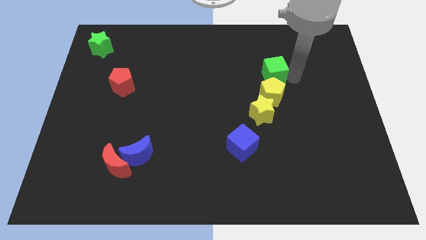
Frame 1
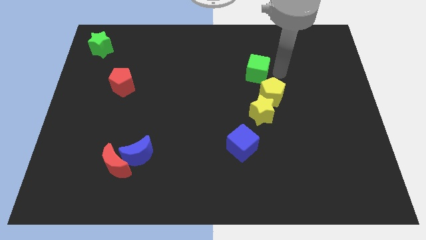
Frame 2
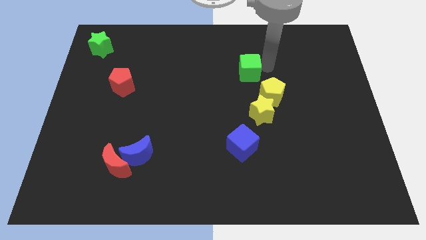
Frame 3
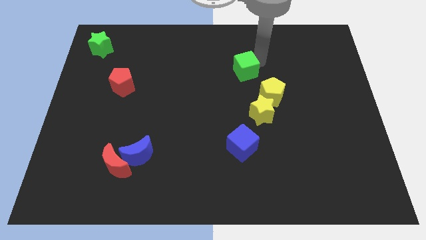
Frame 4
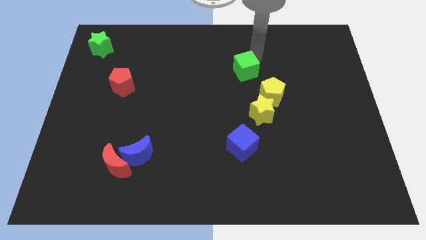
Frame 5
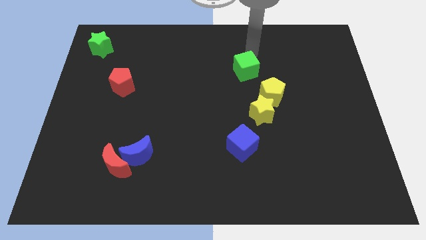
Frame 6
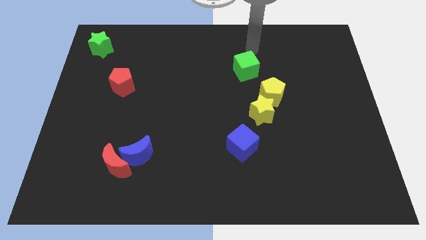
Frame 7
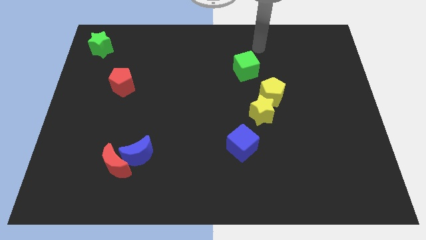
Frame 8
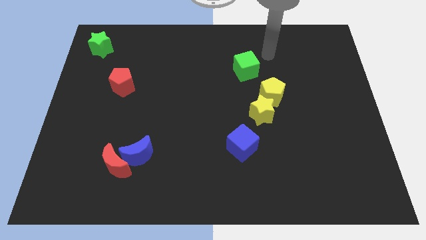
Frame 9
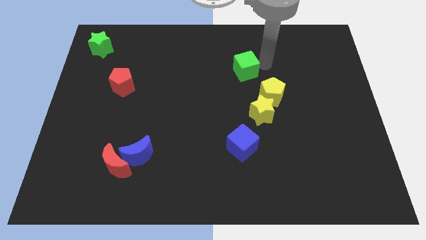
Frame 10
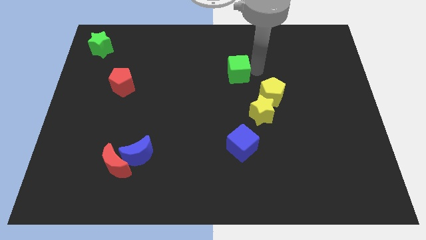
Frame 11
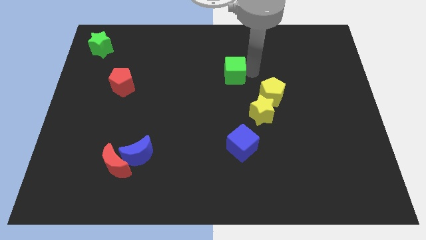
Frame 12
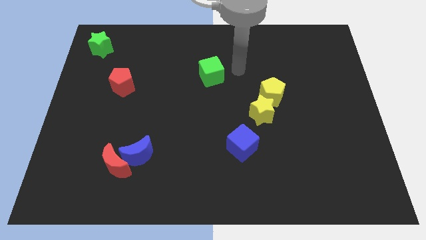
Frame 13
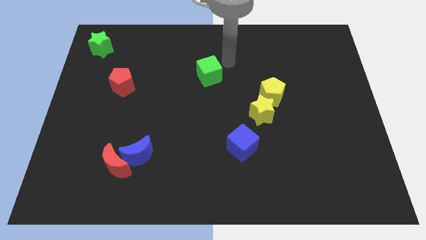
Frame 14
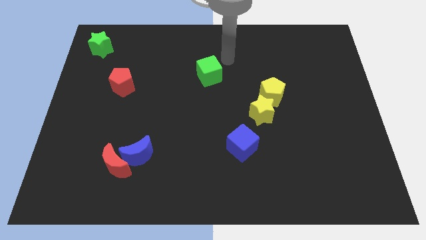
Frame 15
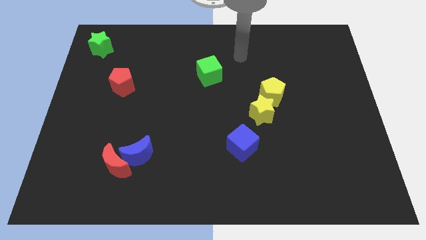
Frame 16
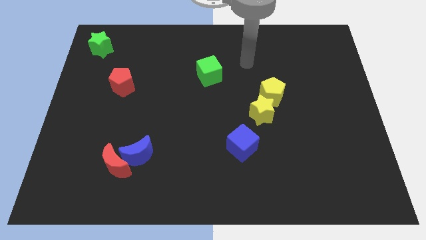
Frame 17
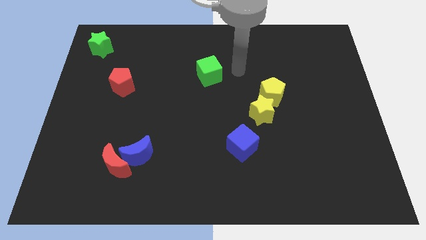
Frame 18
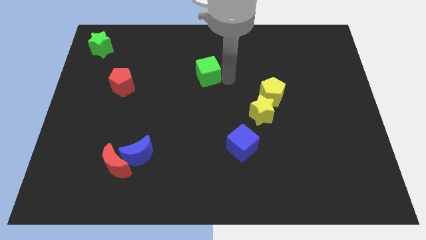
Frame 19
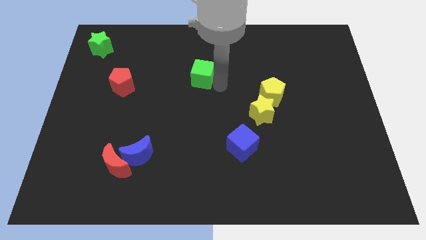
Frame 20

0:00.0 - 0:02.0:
move the green cube away from the yellow pentagon

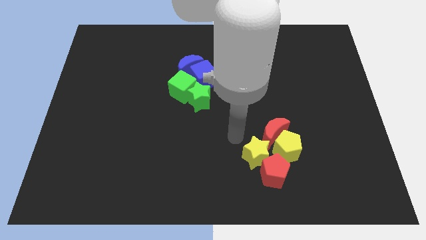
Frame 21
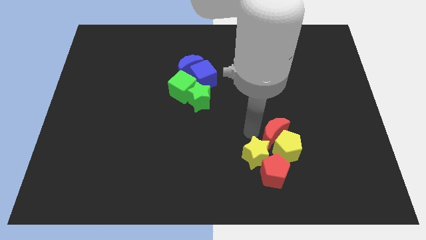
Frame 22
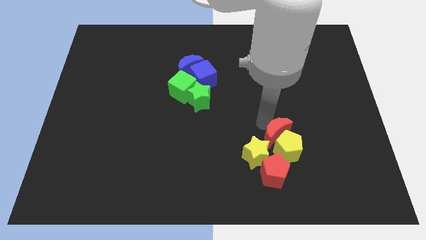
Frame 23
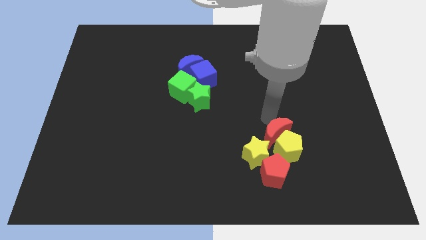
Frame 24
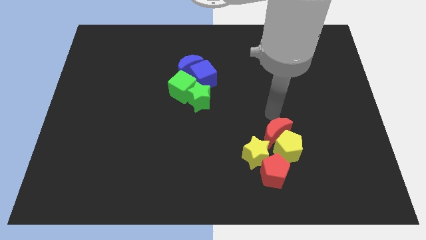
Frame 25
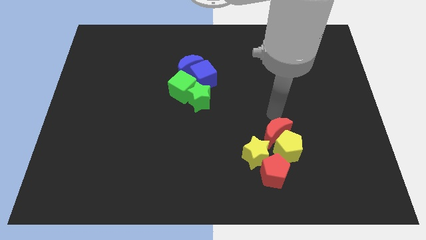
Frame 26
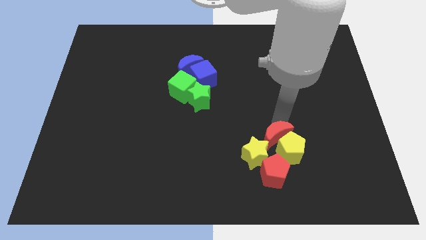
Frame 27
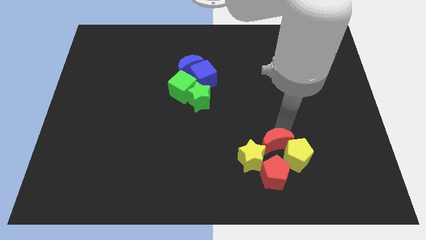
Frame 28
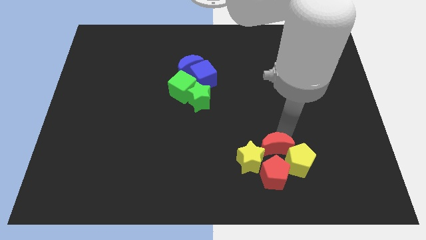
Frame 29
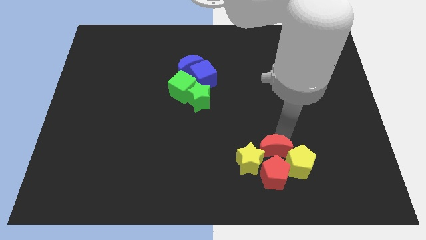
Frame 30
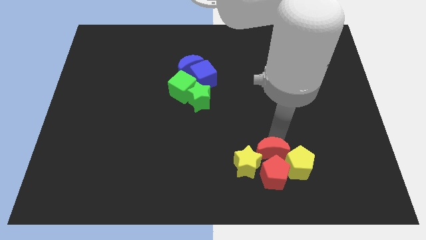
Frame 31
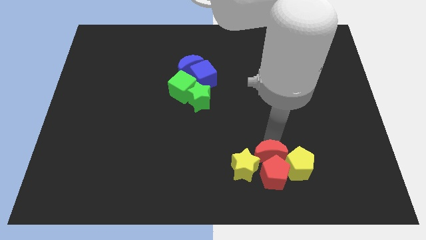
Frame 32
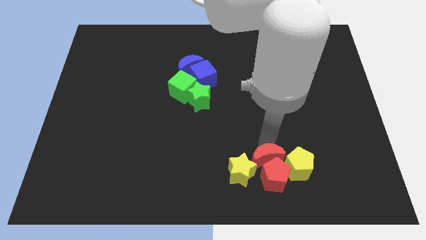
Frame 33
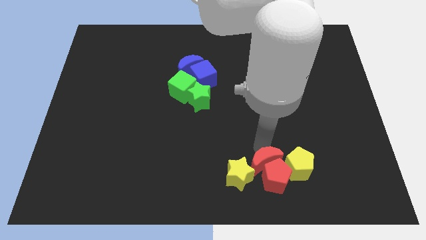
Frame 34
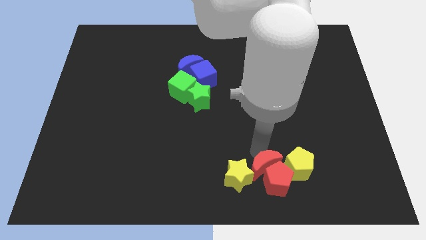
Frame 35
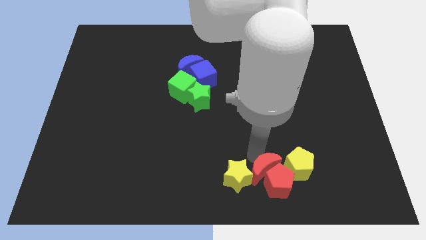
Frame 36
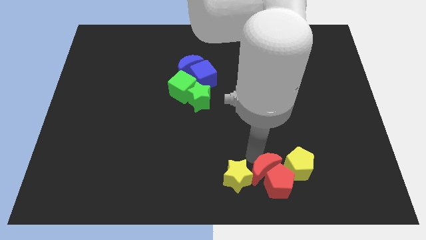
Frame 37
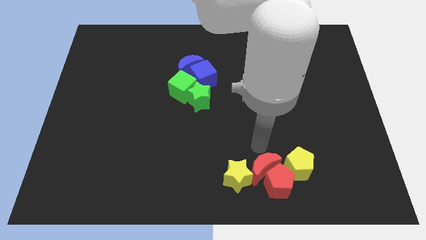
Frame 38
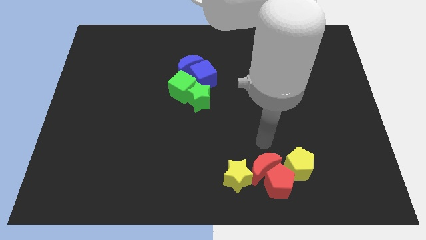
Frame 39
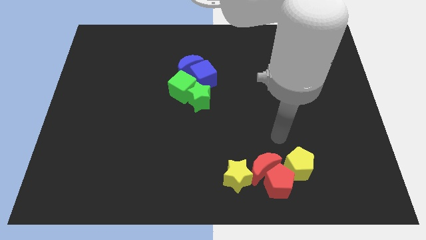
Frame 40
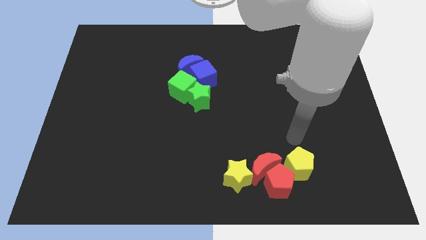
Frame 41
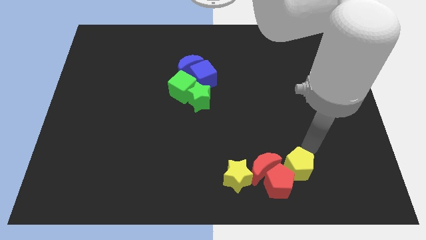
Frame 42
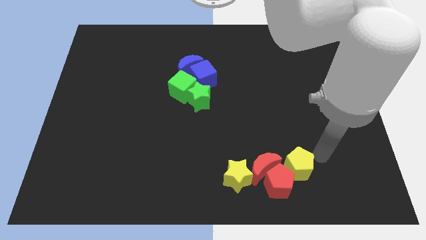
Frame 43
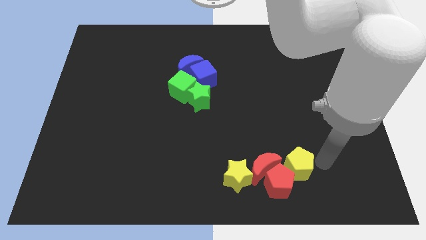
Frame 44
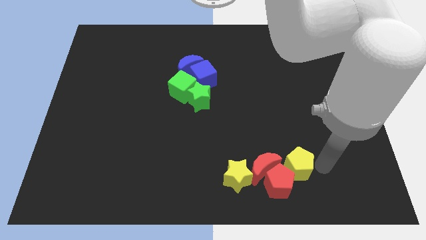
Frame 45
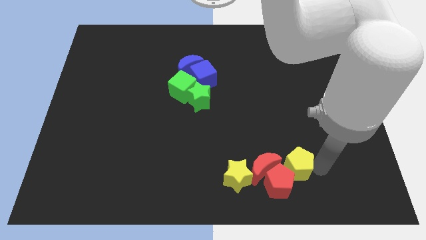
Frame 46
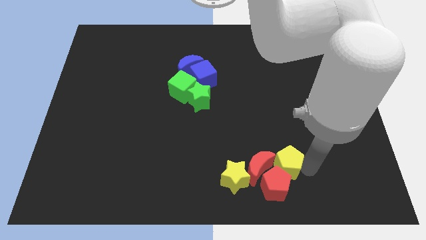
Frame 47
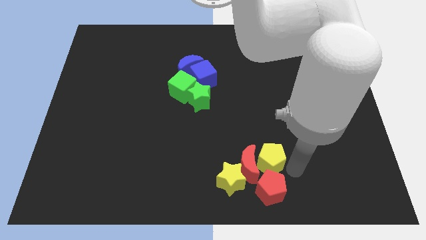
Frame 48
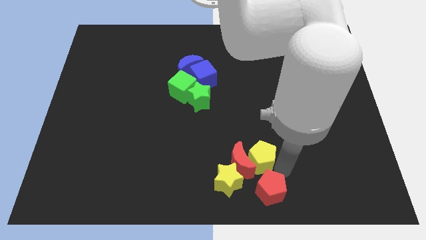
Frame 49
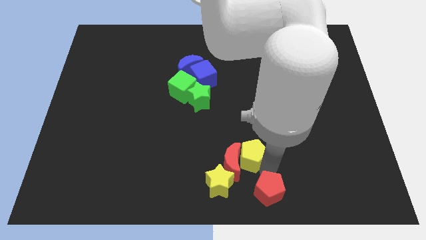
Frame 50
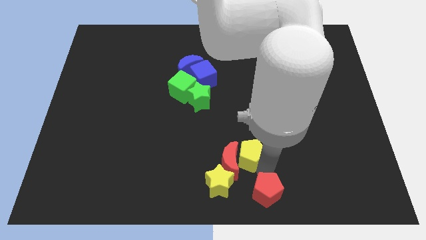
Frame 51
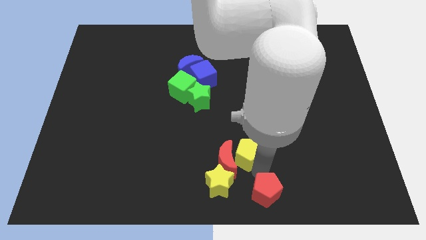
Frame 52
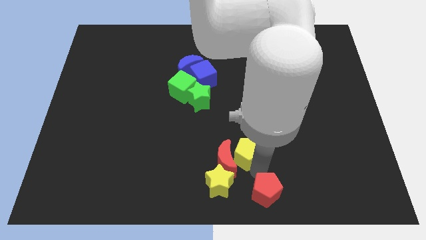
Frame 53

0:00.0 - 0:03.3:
disturb all the red and yellow blocks

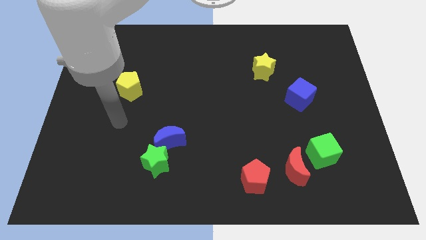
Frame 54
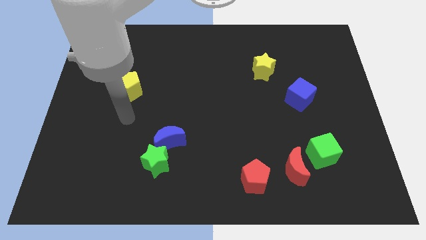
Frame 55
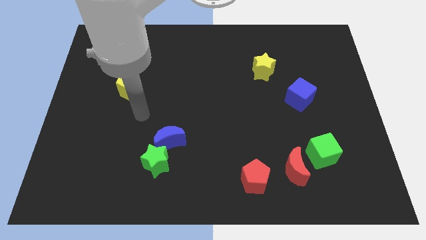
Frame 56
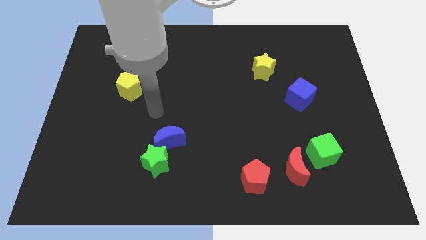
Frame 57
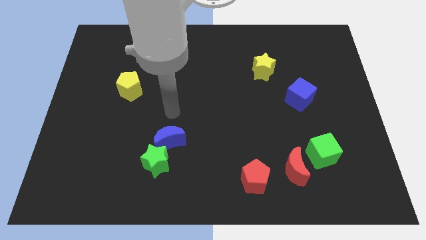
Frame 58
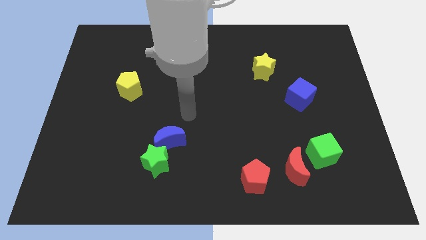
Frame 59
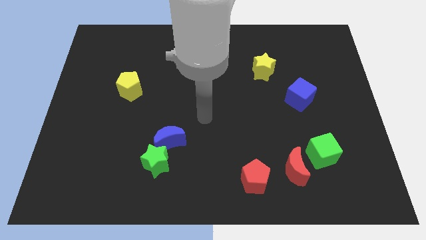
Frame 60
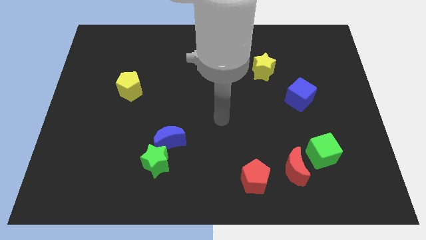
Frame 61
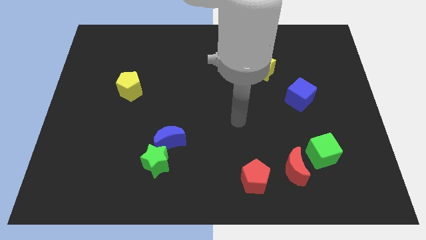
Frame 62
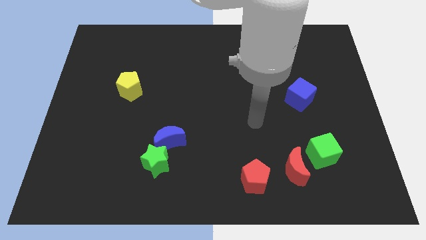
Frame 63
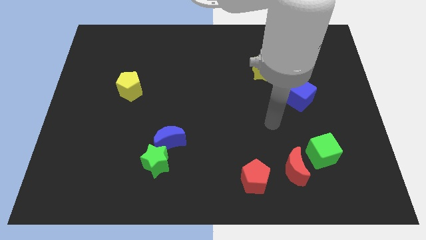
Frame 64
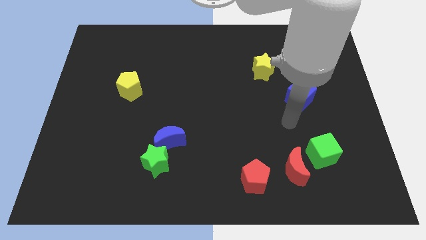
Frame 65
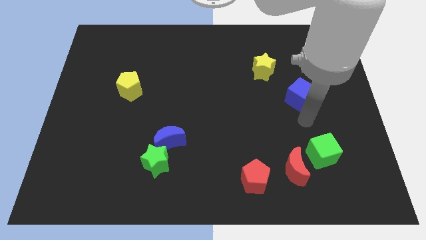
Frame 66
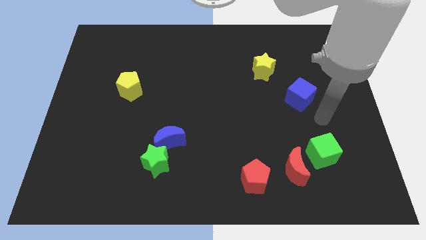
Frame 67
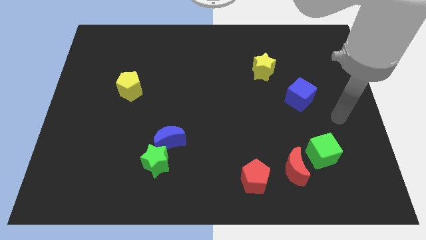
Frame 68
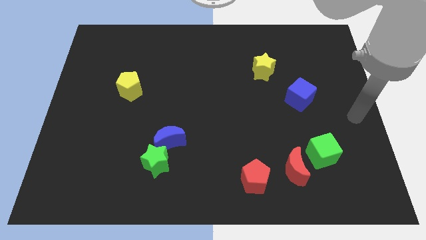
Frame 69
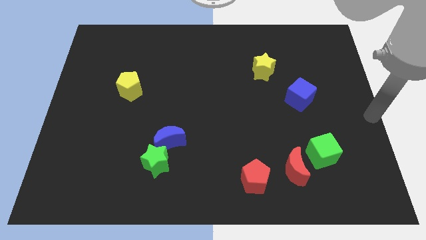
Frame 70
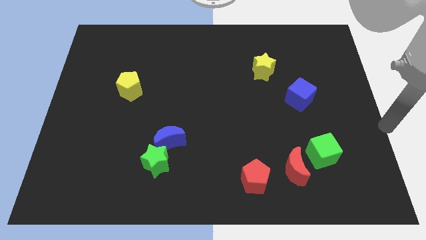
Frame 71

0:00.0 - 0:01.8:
move your arm to the right center of the board

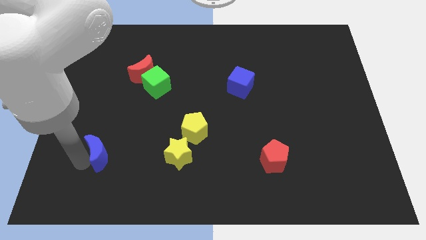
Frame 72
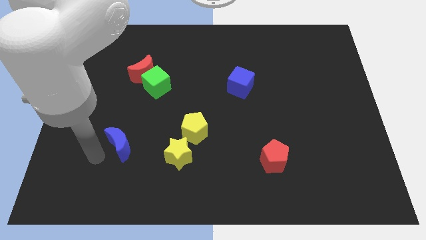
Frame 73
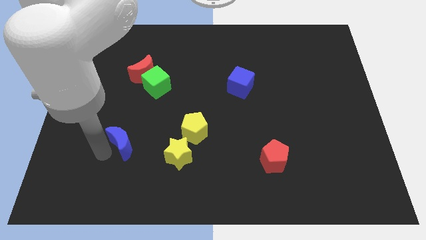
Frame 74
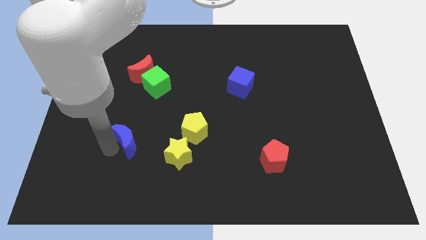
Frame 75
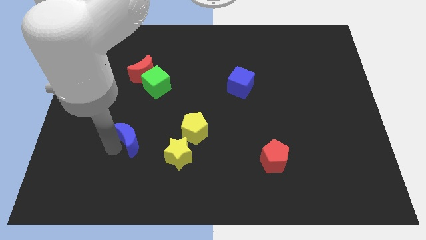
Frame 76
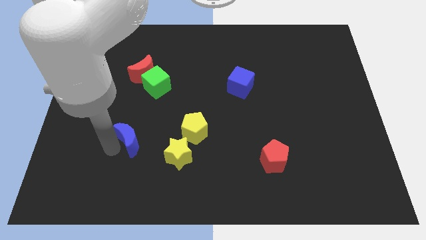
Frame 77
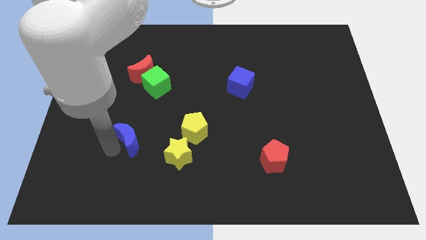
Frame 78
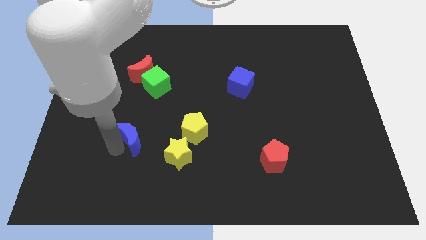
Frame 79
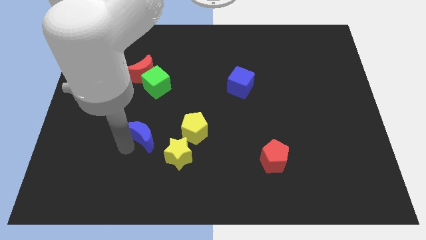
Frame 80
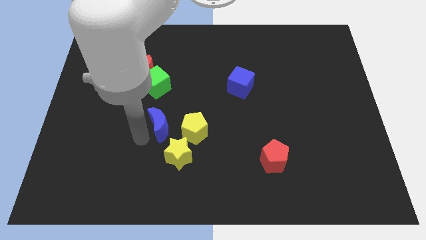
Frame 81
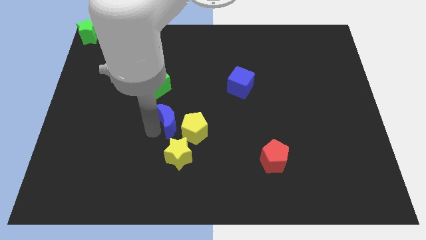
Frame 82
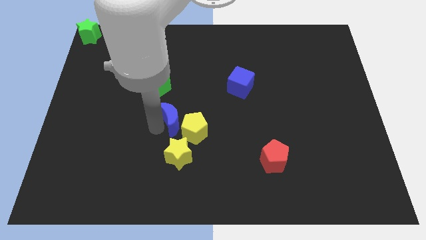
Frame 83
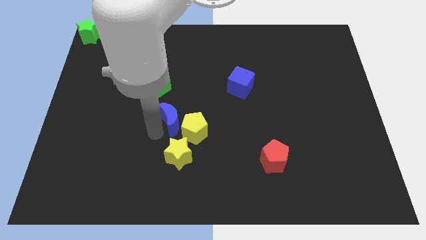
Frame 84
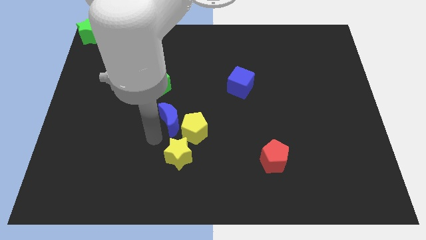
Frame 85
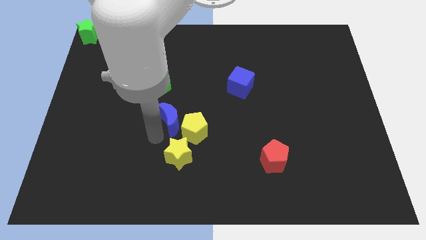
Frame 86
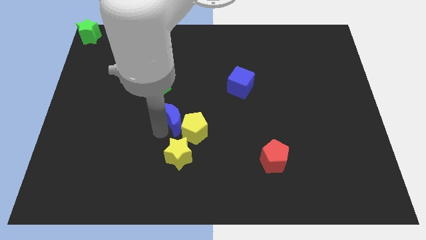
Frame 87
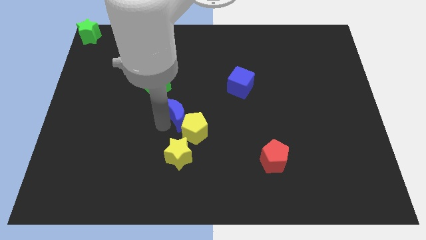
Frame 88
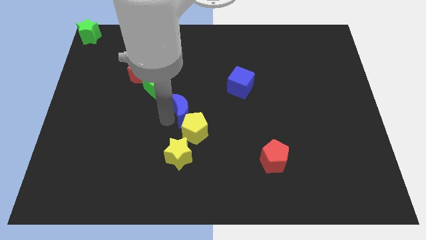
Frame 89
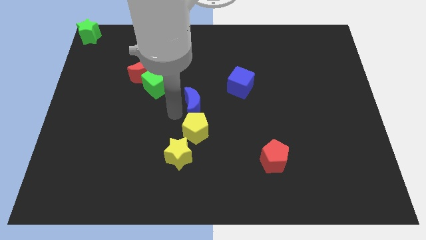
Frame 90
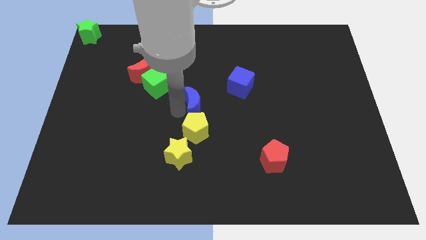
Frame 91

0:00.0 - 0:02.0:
place the blue crescent at the top side of the yellow pentagon
